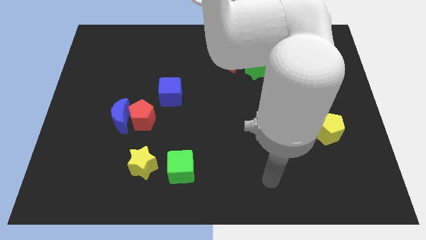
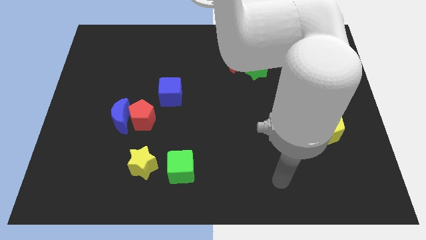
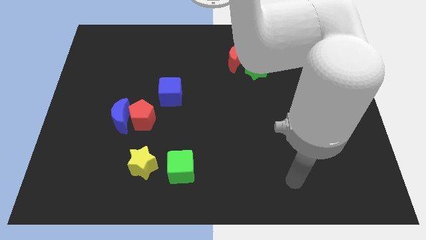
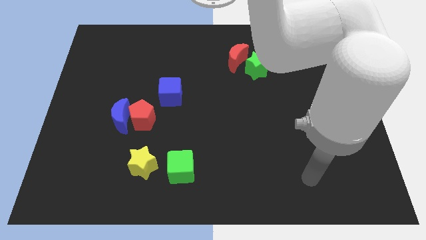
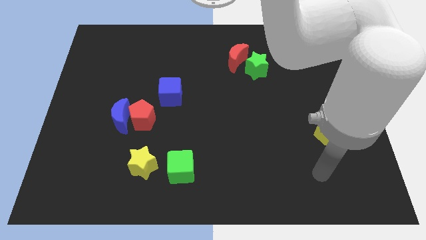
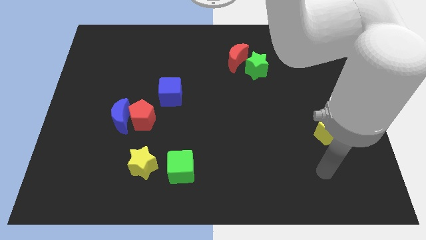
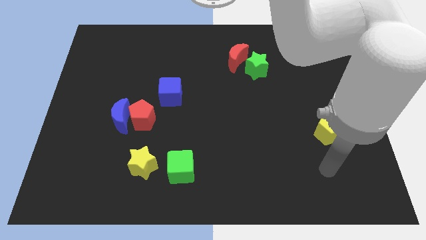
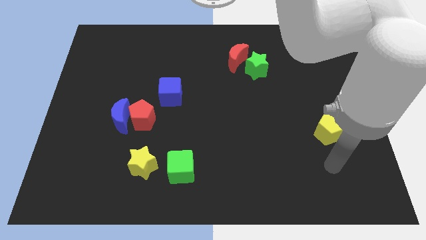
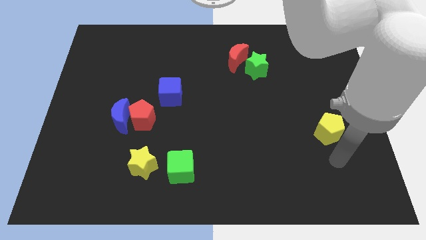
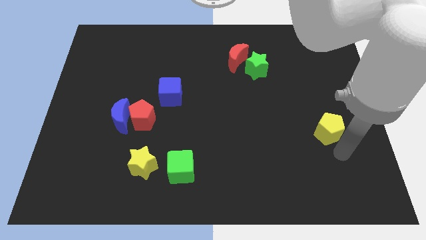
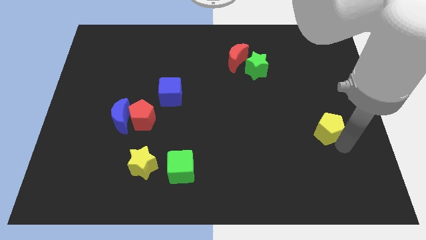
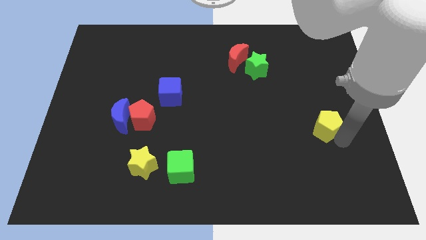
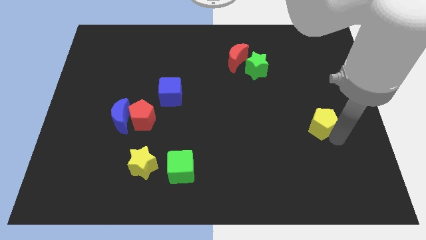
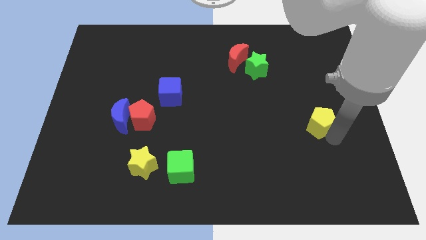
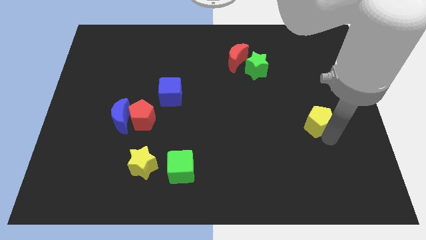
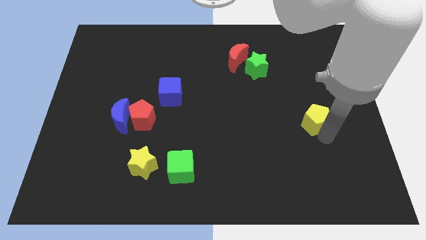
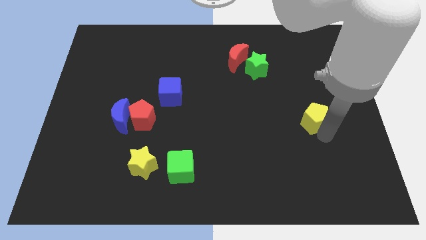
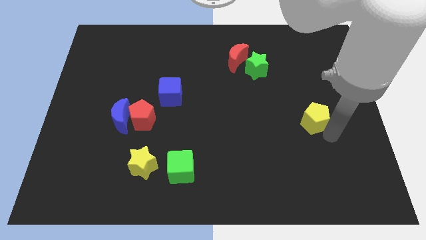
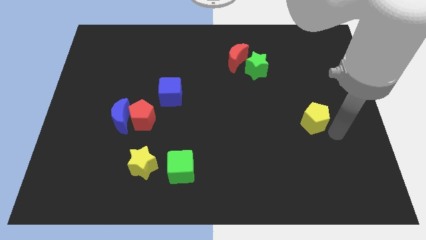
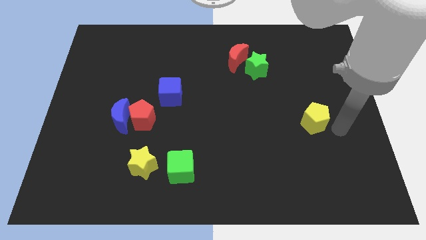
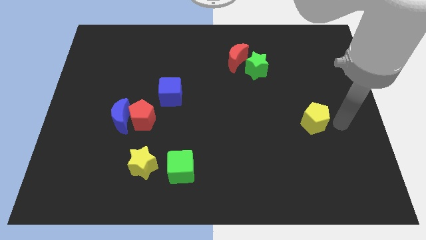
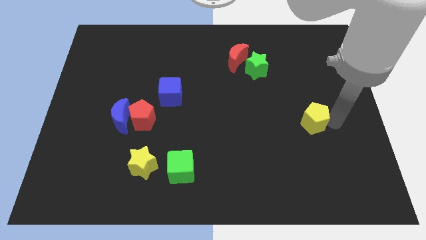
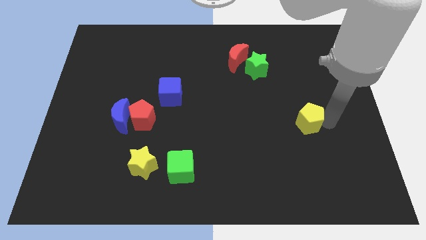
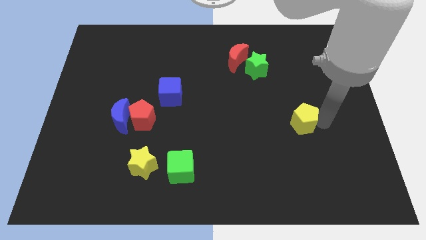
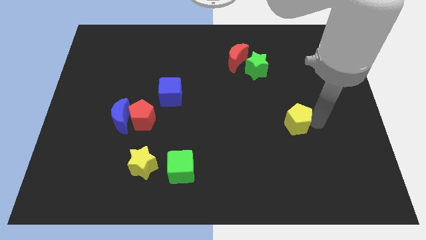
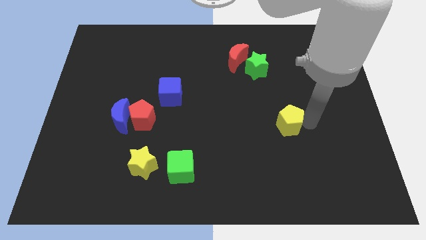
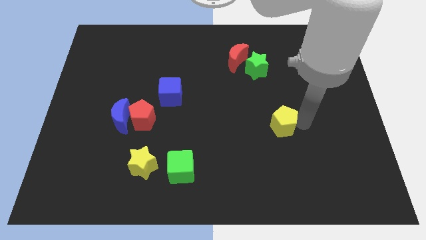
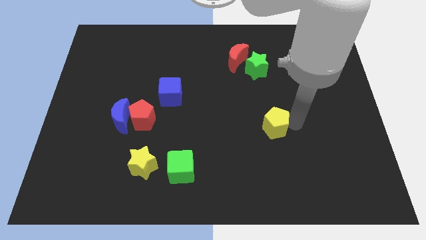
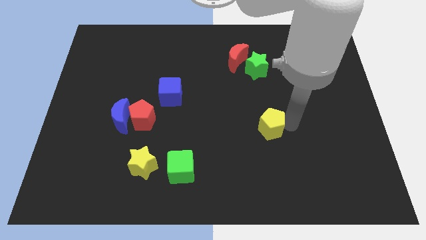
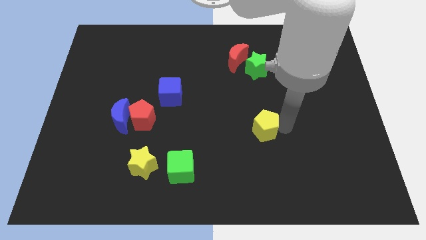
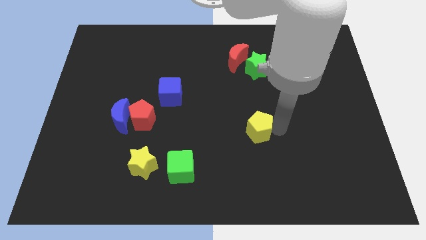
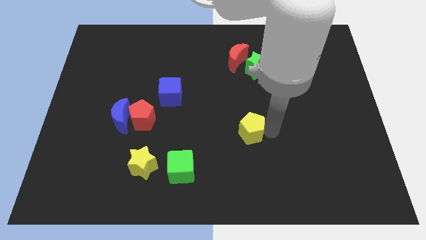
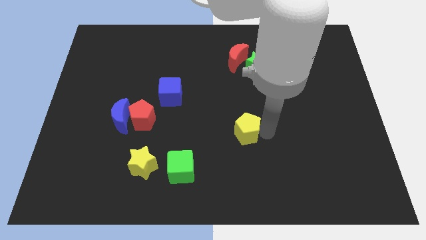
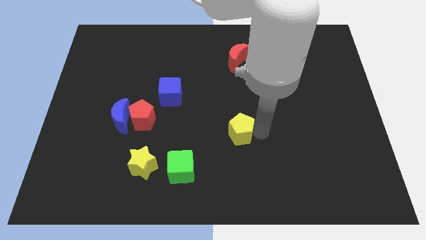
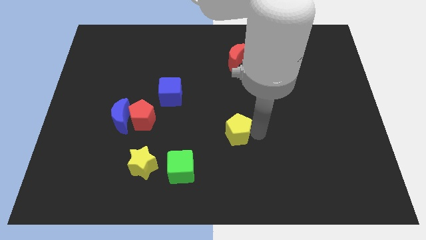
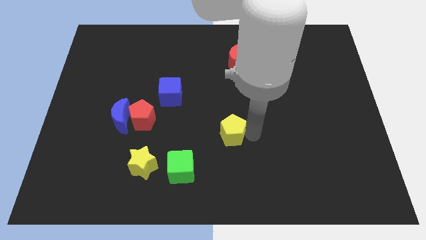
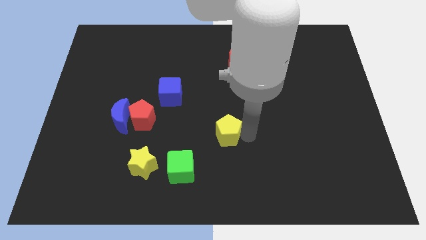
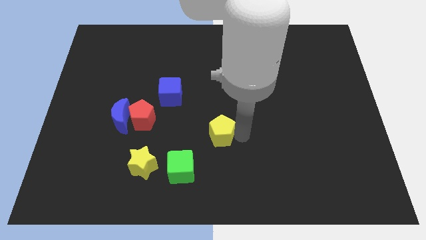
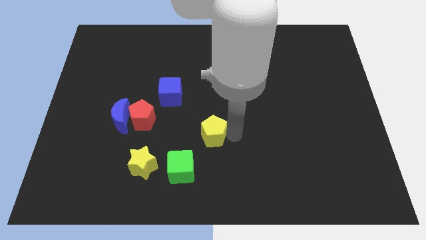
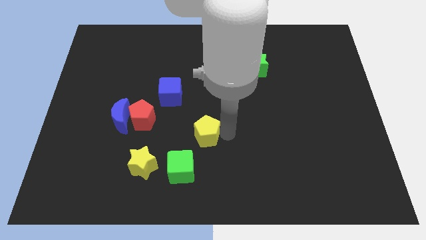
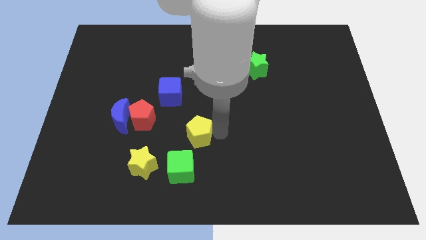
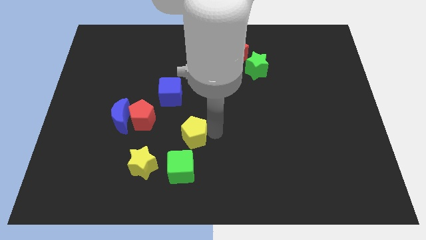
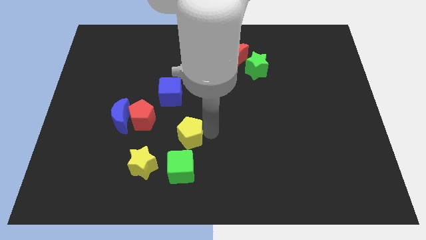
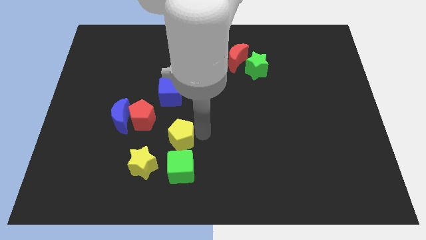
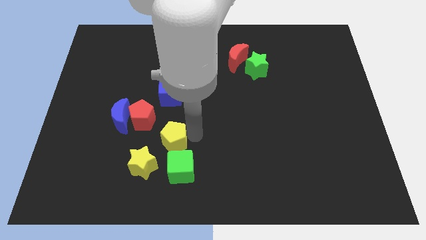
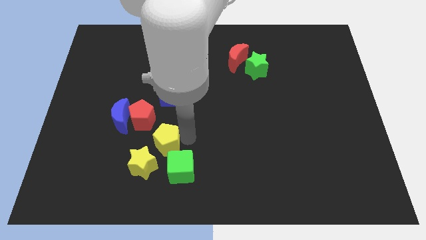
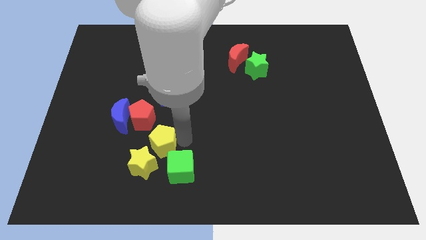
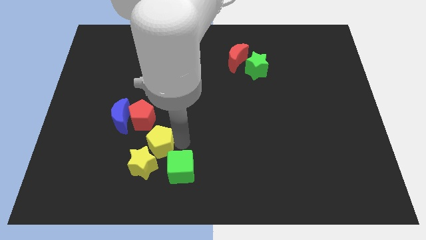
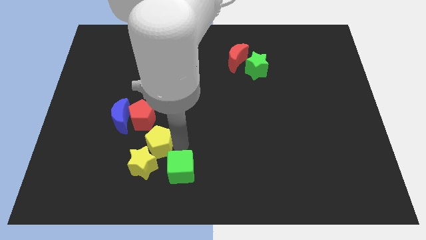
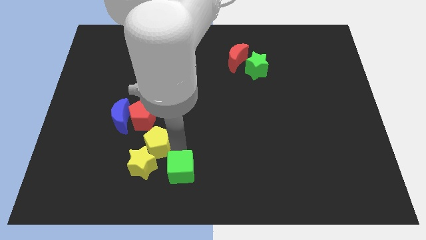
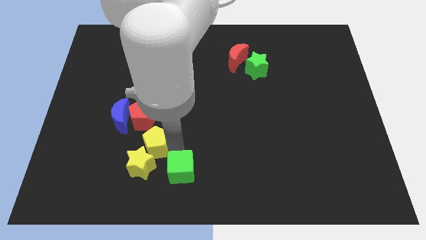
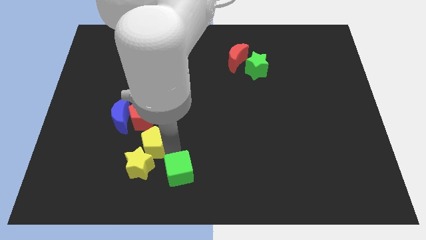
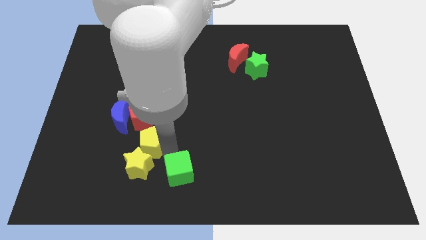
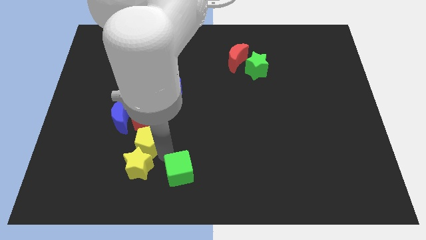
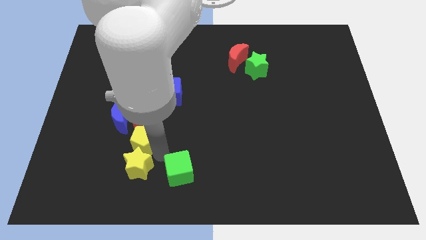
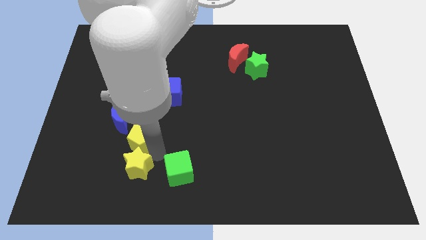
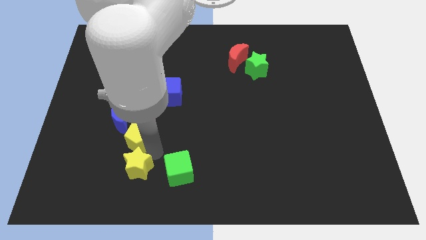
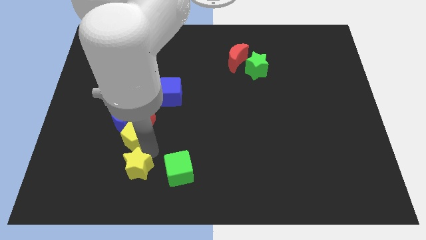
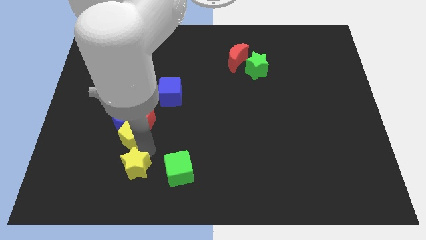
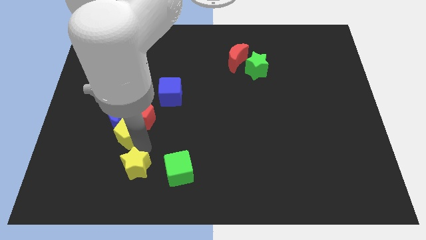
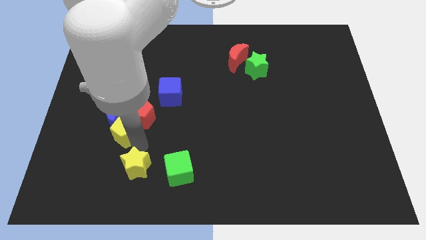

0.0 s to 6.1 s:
move the yellow pentagon close to the blue moon

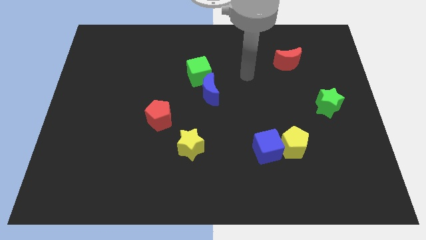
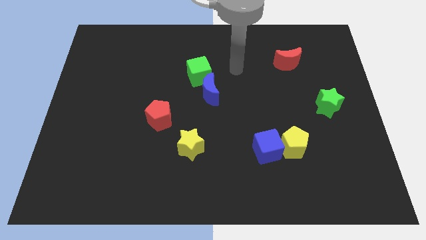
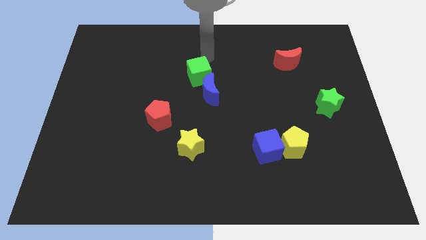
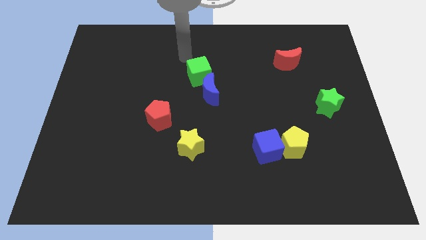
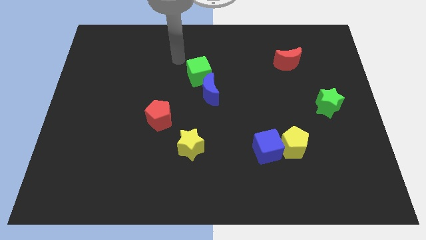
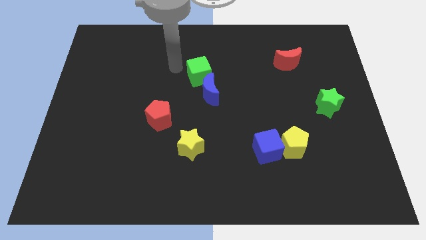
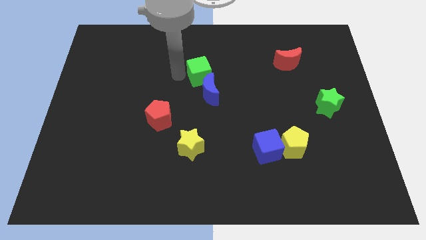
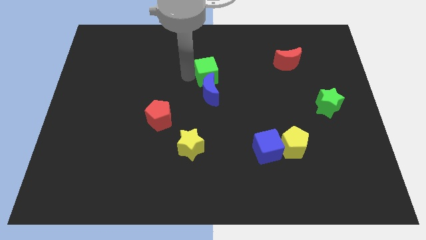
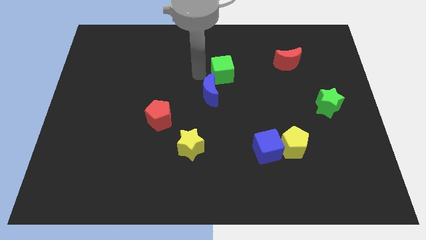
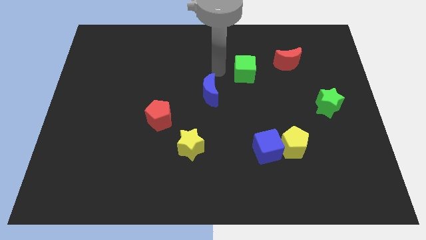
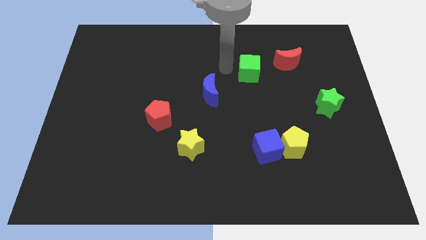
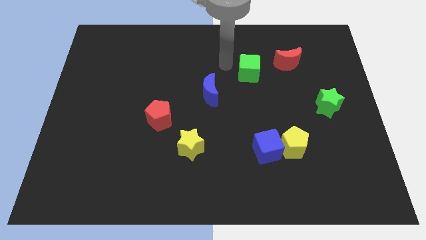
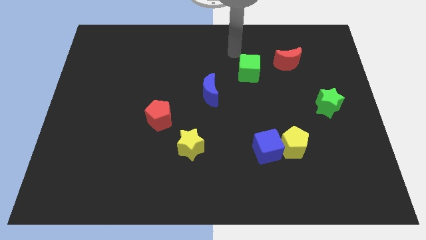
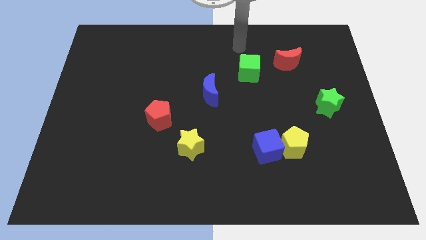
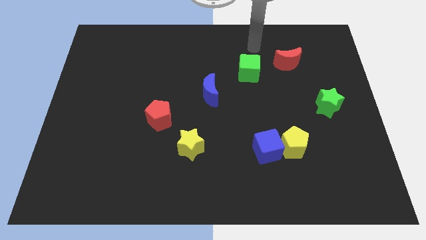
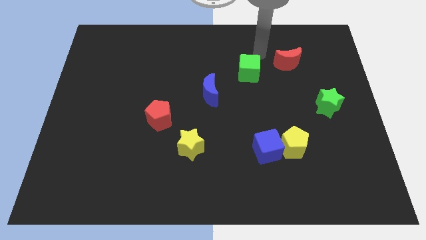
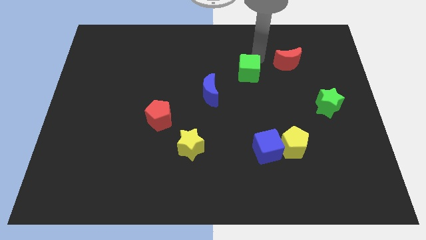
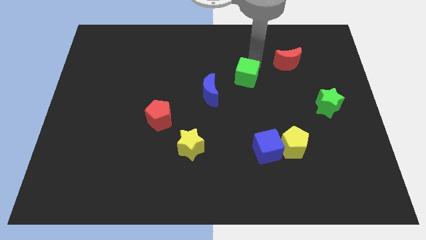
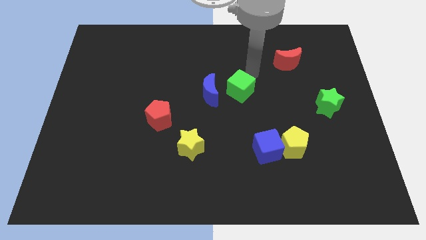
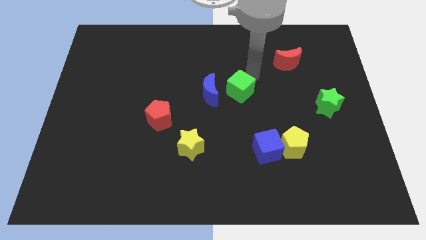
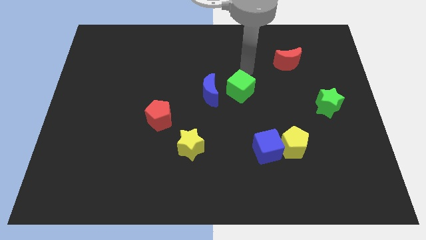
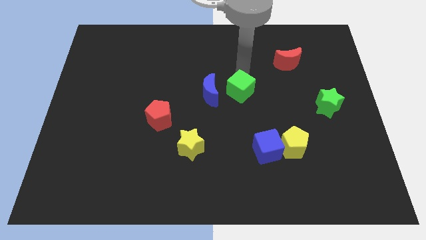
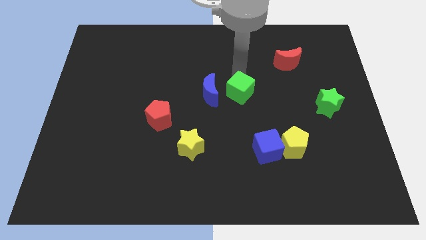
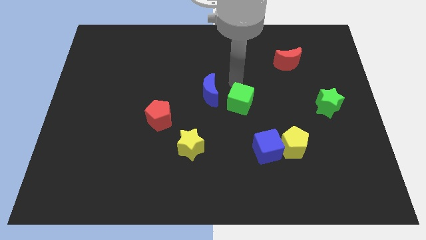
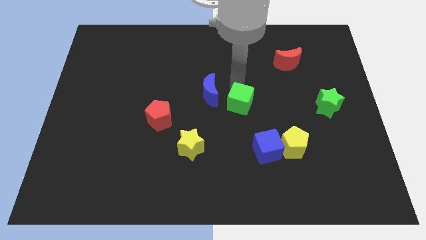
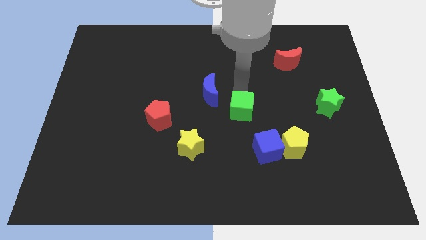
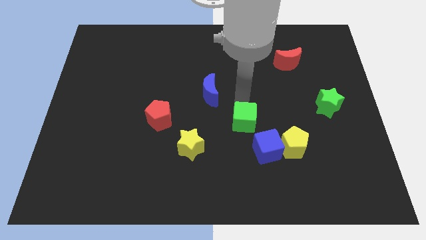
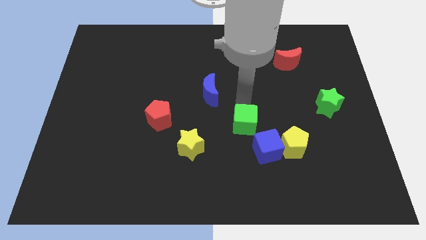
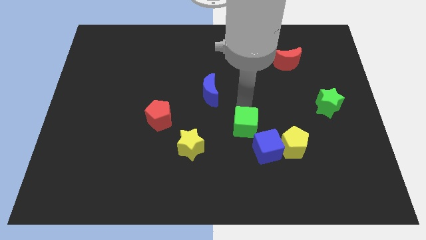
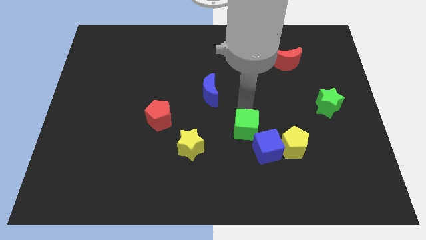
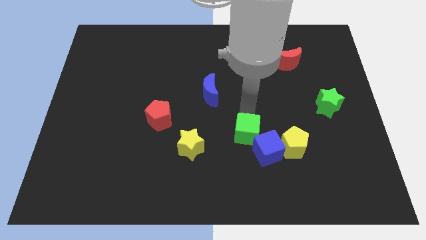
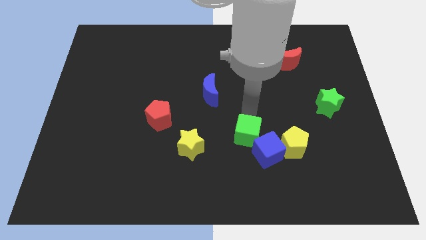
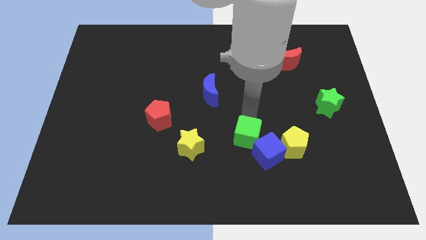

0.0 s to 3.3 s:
slide the green cube next to the blue cube
